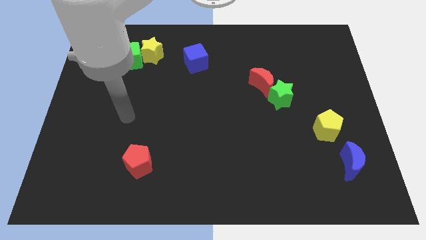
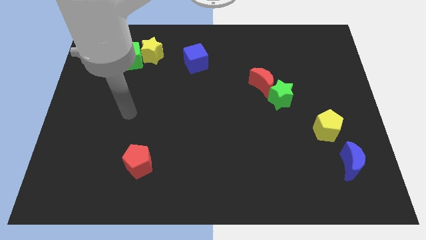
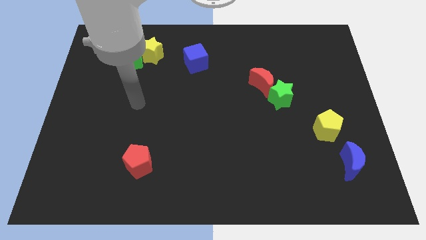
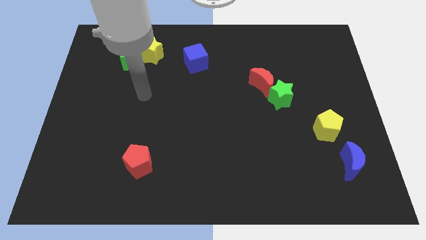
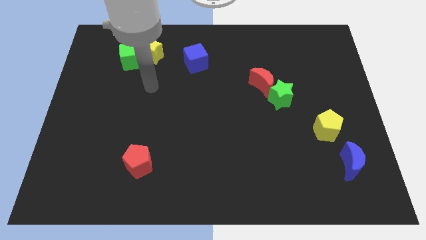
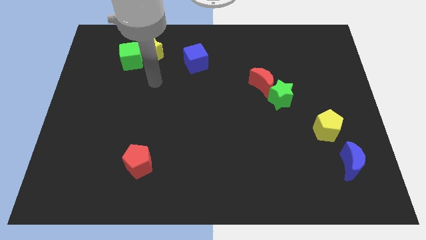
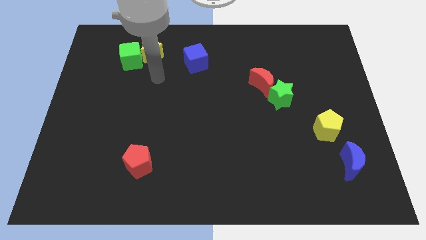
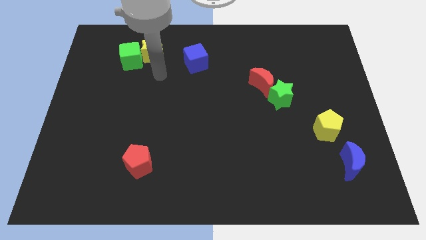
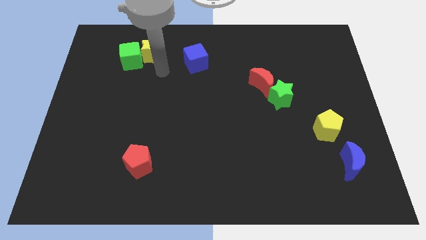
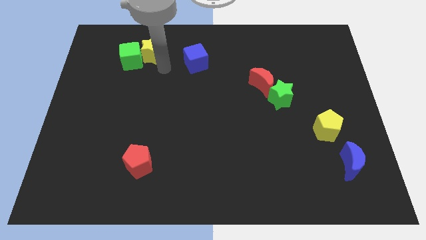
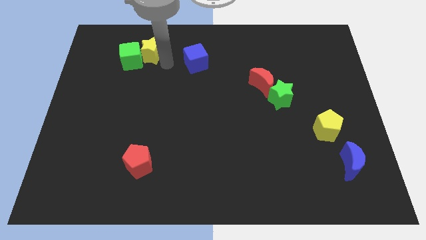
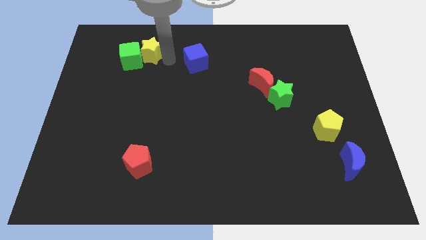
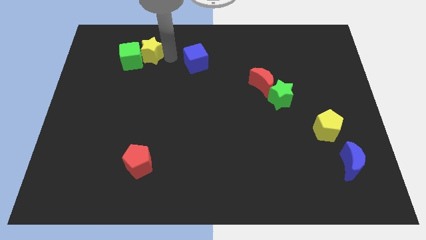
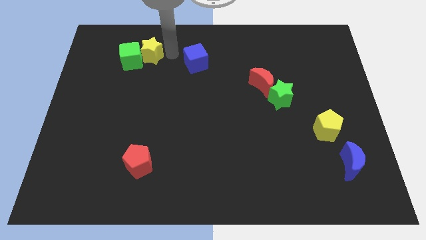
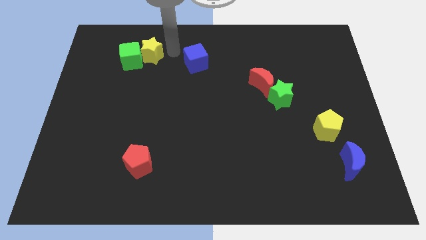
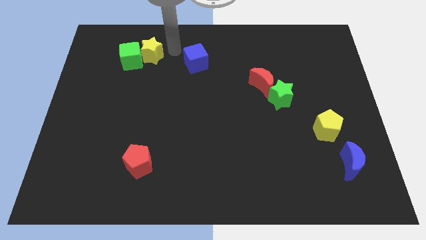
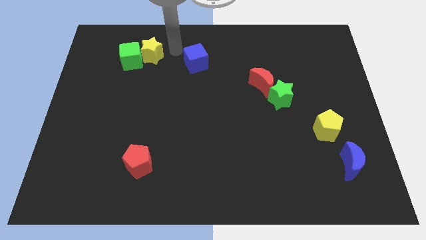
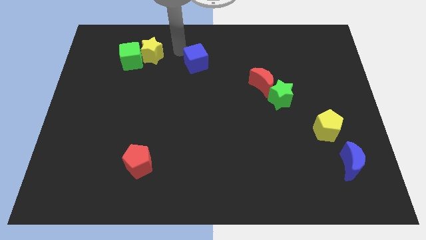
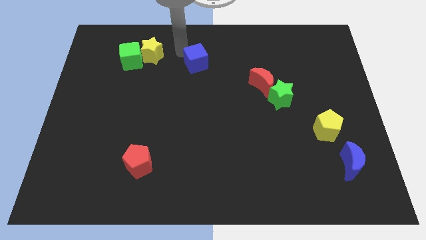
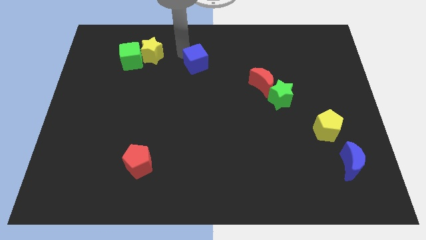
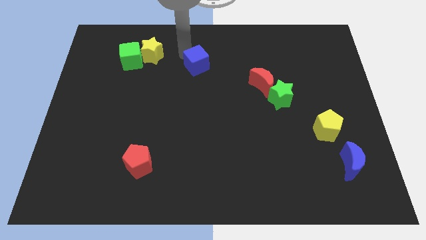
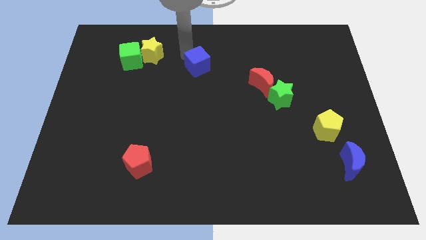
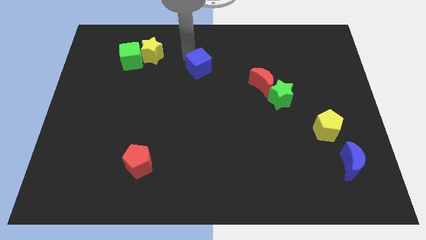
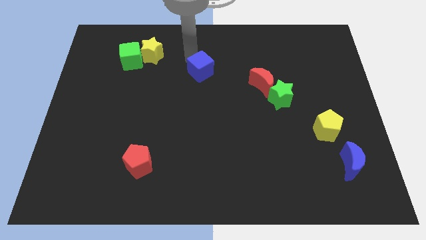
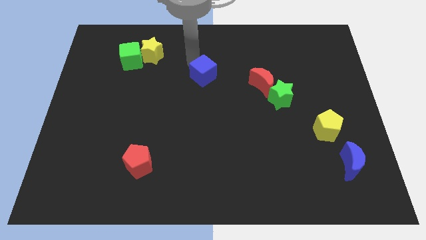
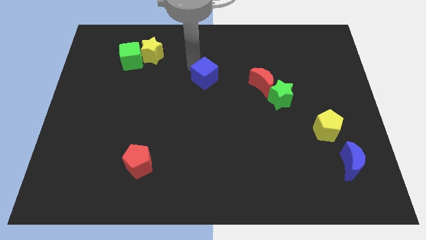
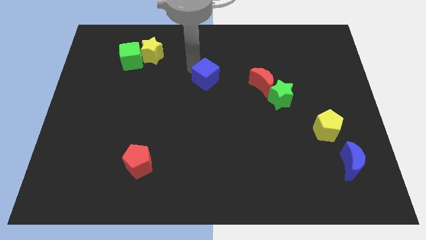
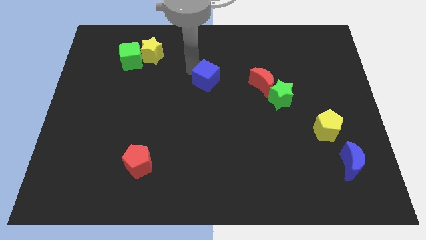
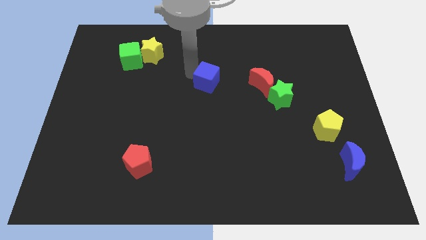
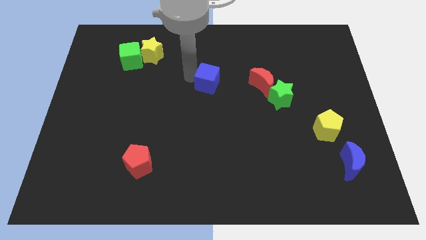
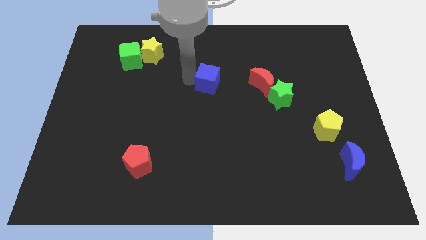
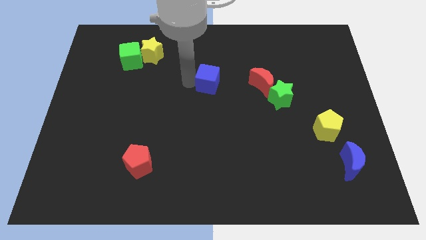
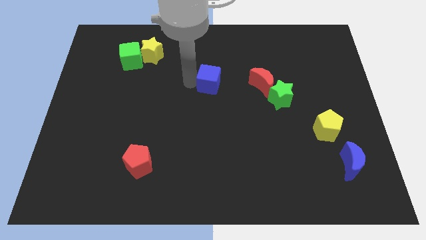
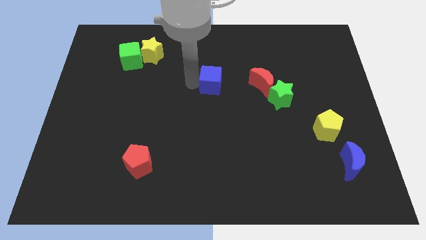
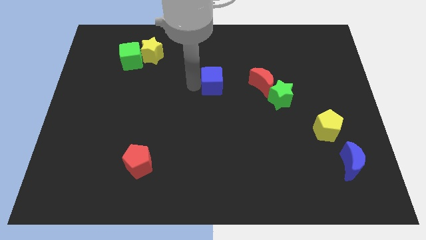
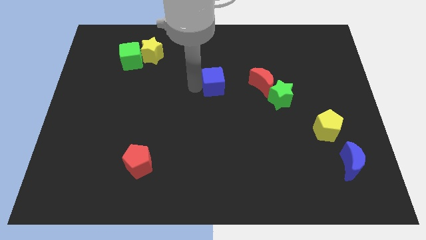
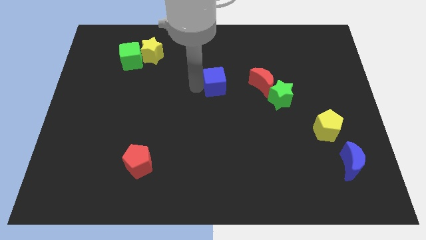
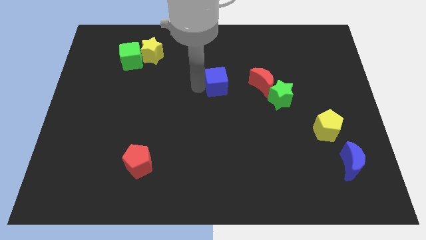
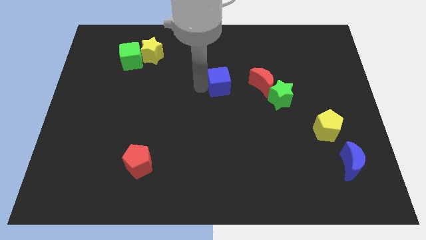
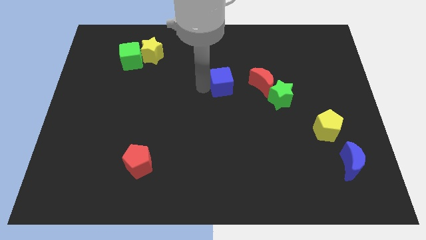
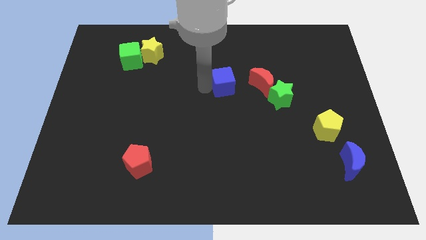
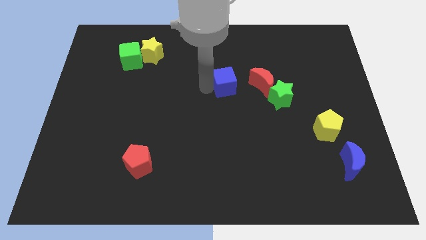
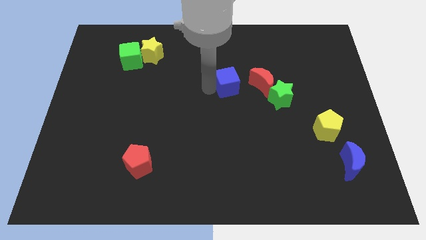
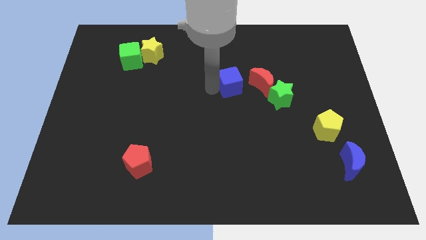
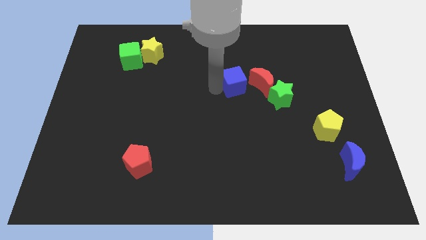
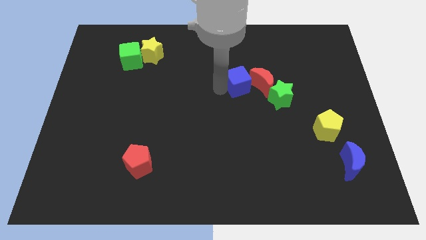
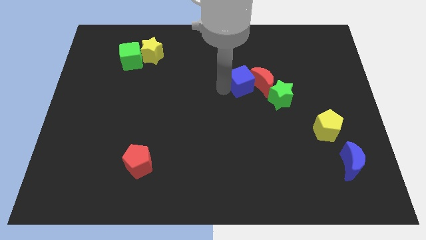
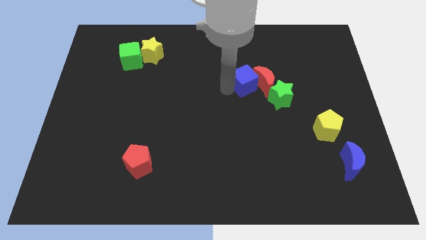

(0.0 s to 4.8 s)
put the blue cube to the red moon

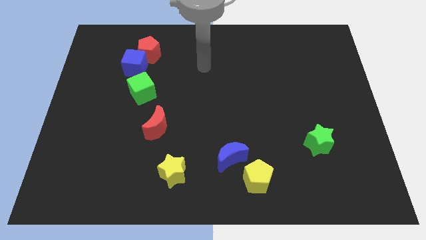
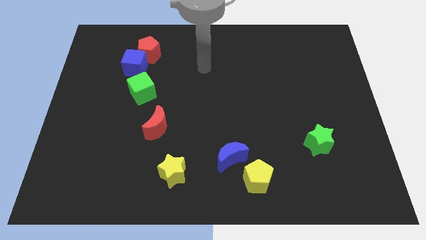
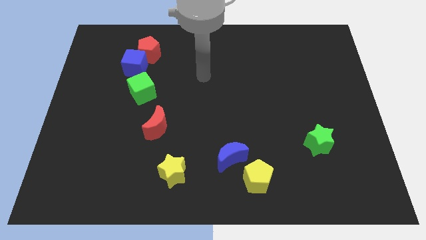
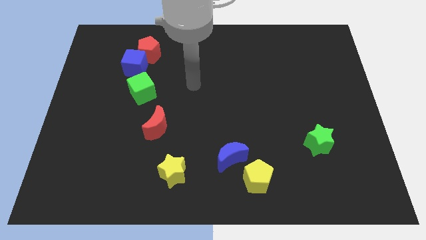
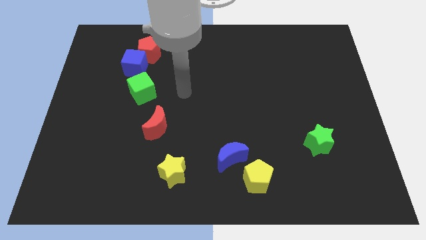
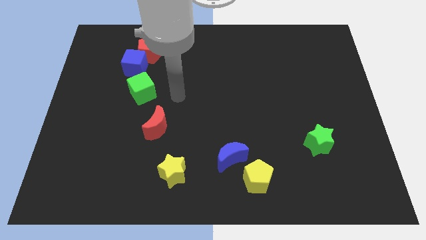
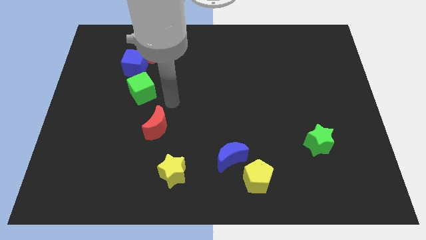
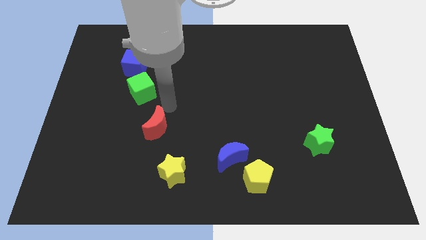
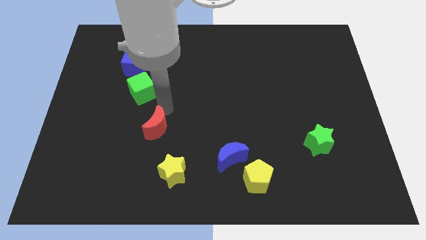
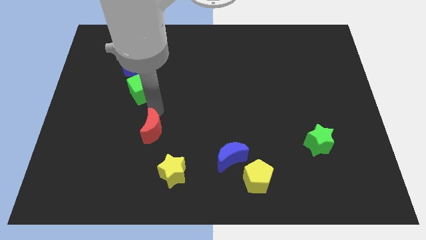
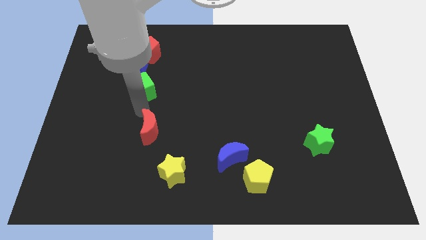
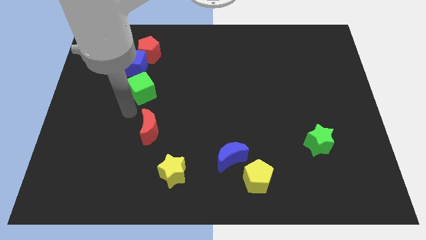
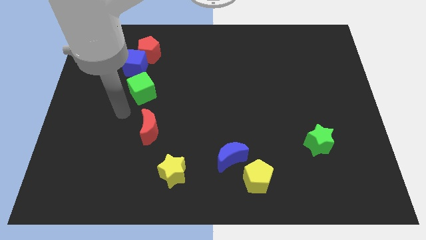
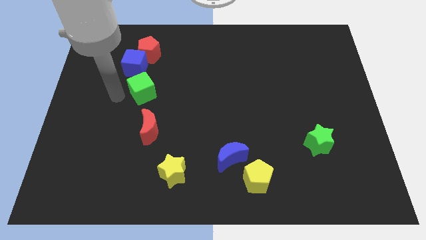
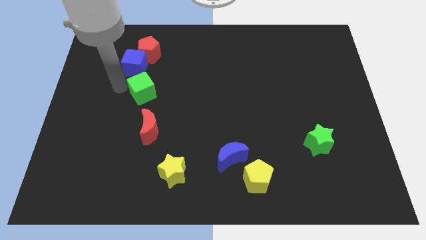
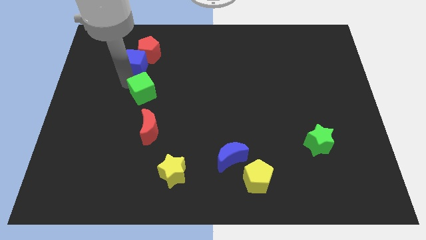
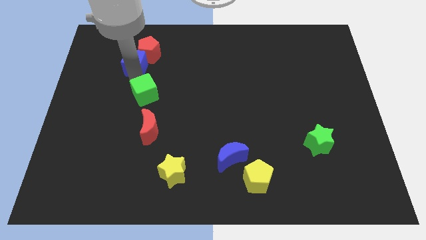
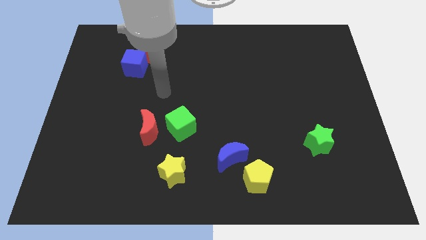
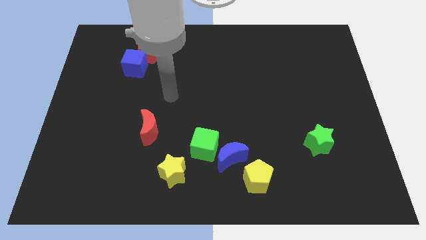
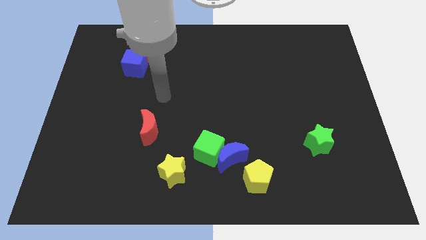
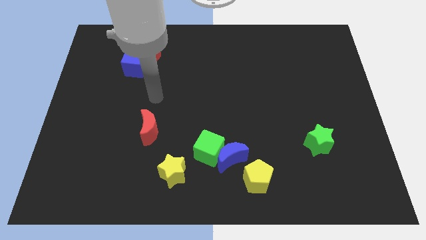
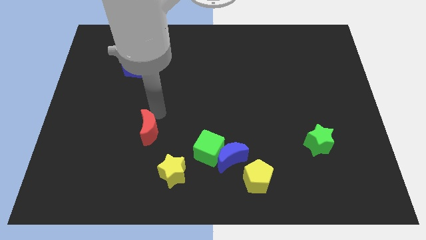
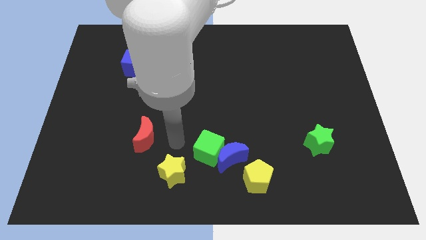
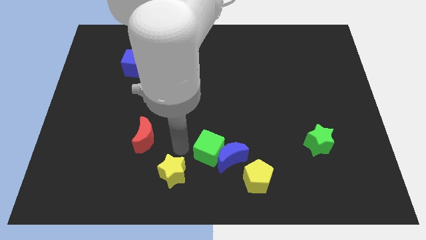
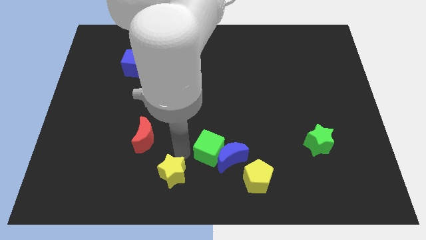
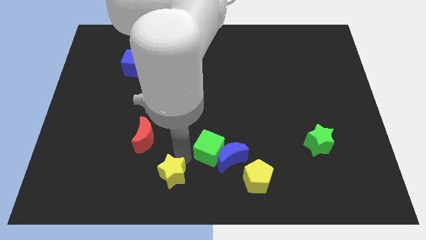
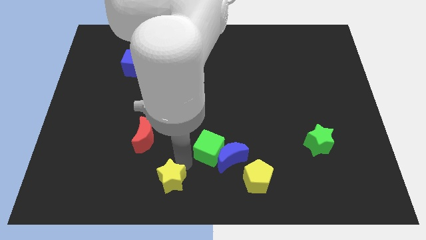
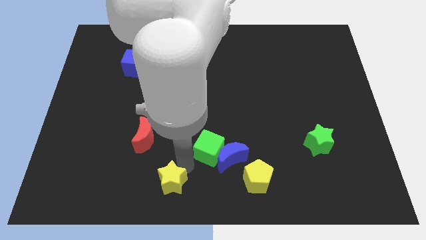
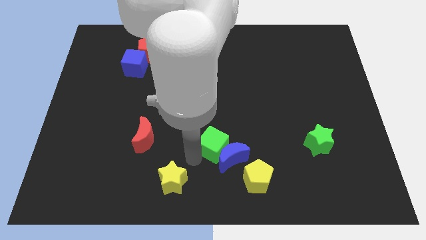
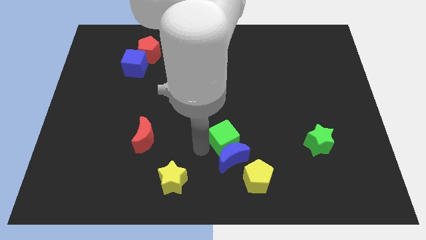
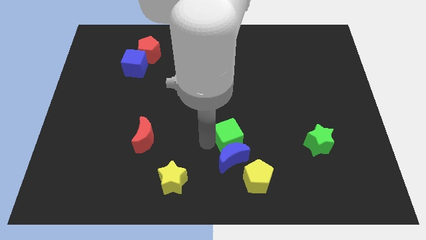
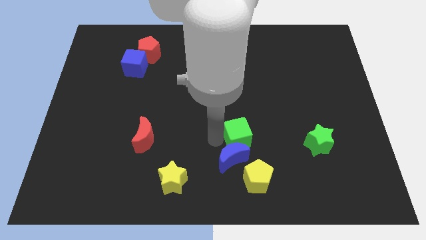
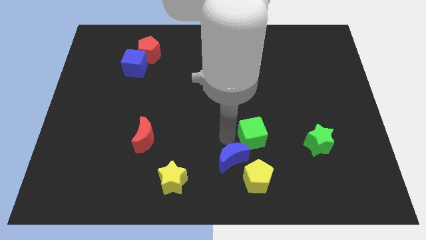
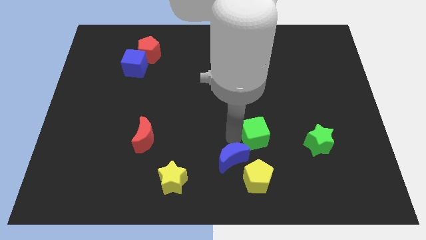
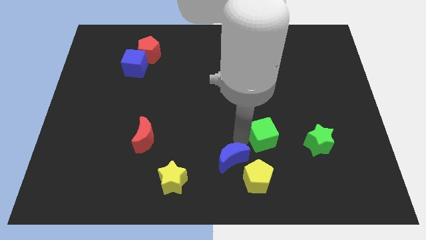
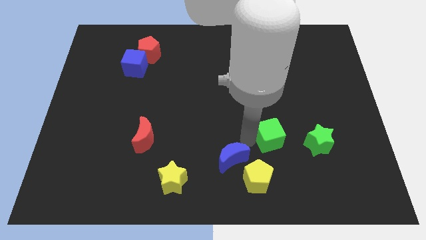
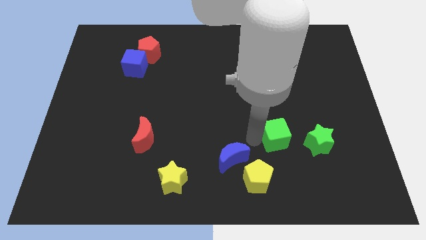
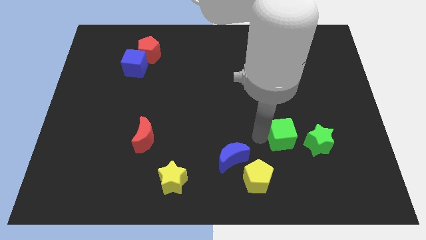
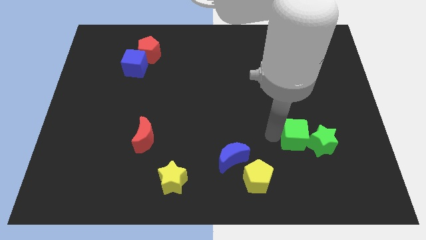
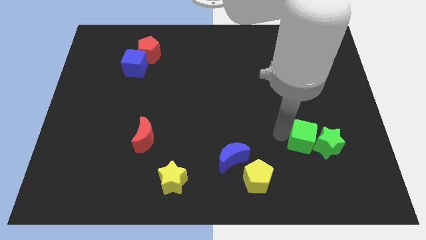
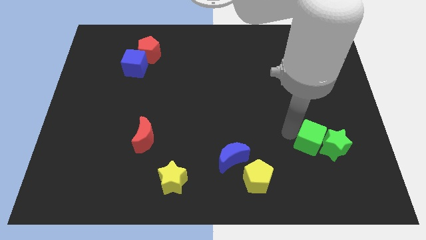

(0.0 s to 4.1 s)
slide the green cube next to the green star
